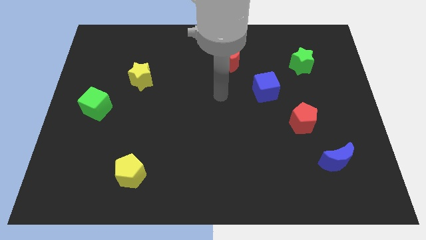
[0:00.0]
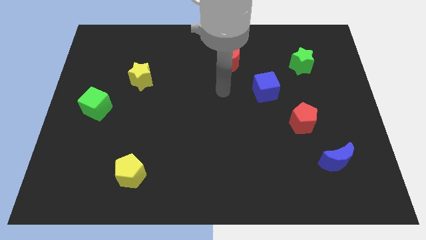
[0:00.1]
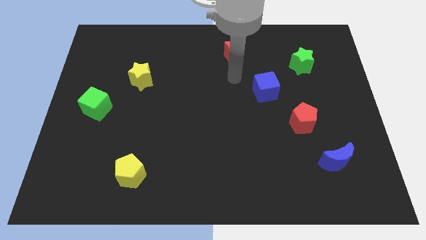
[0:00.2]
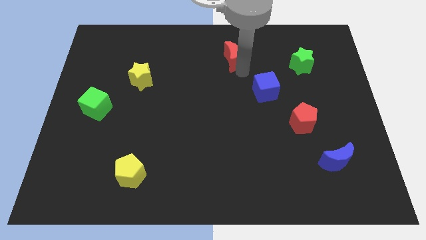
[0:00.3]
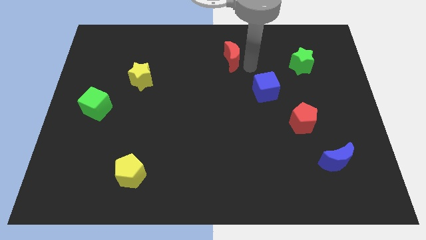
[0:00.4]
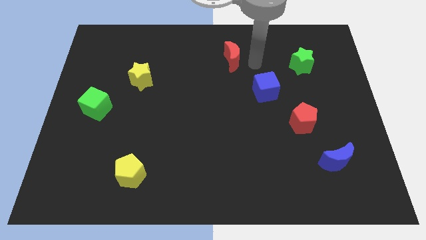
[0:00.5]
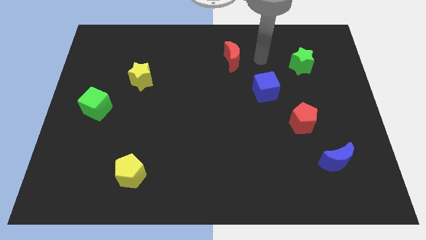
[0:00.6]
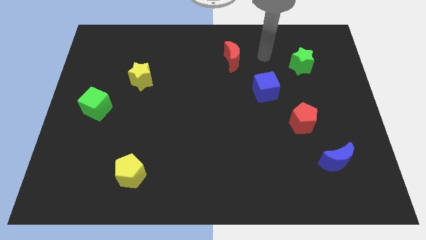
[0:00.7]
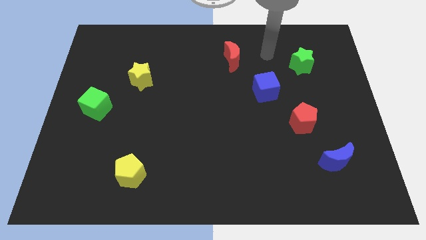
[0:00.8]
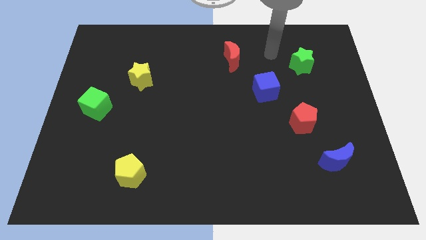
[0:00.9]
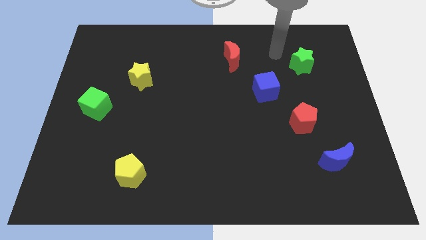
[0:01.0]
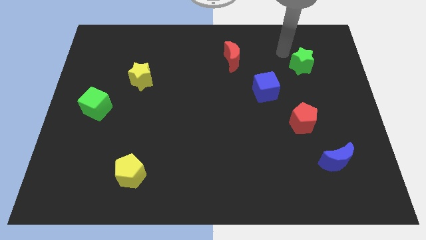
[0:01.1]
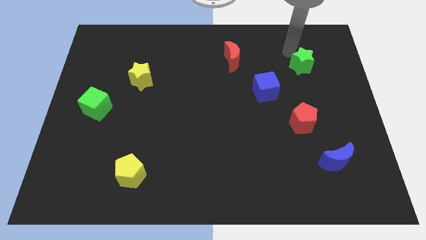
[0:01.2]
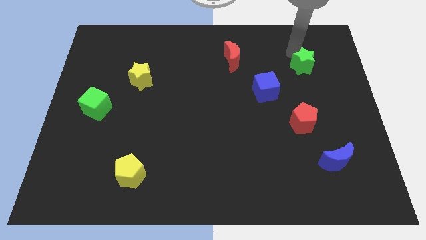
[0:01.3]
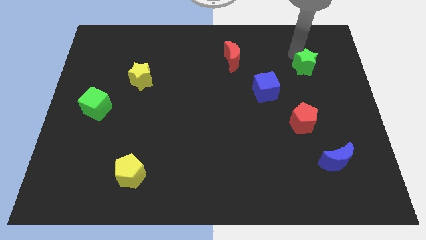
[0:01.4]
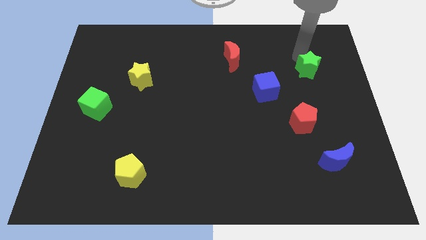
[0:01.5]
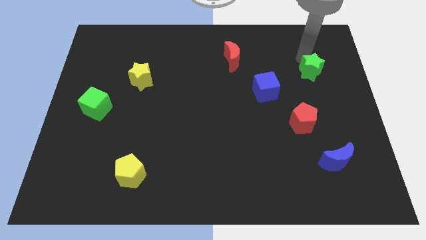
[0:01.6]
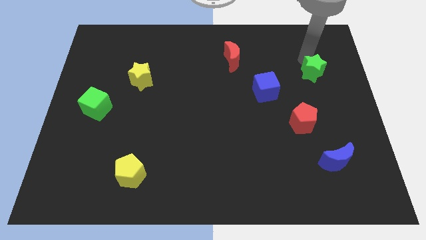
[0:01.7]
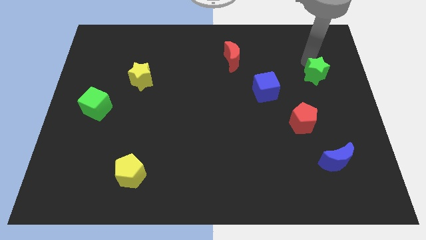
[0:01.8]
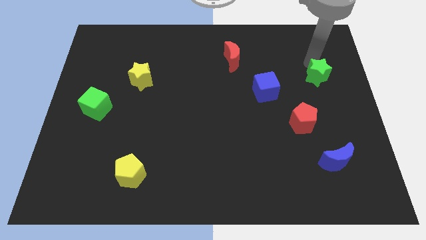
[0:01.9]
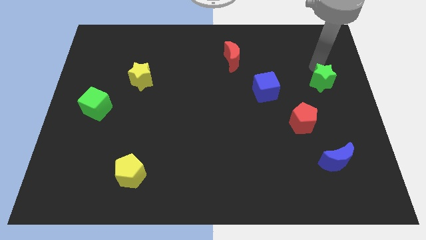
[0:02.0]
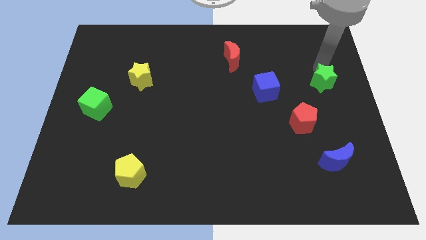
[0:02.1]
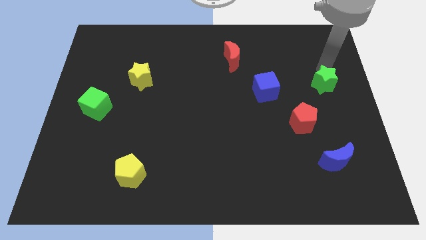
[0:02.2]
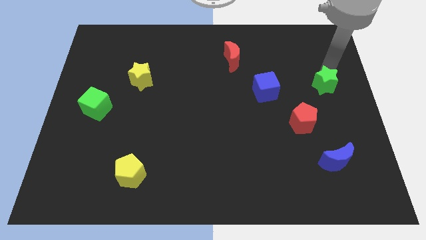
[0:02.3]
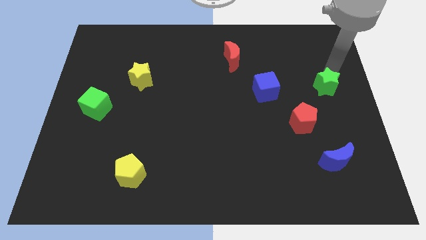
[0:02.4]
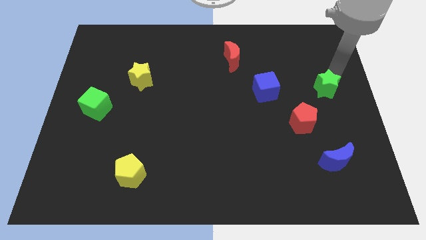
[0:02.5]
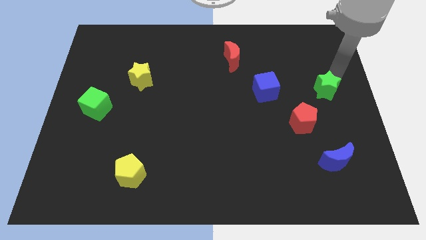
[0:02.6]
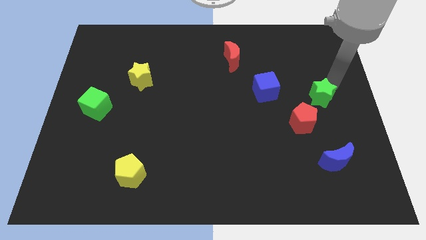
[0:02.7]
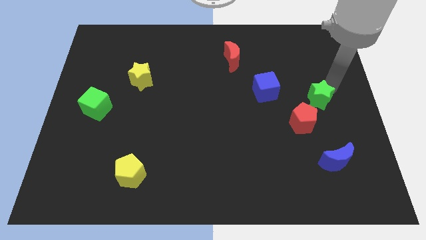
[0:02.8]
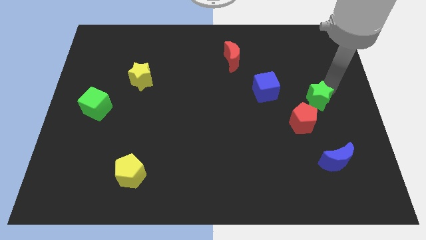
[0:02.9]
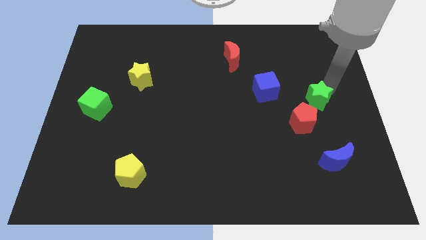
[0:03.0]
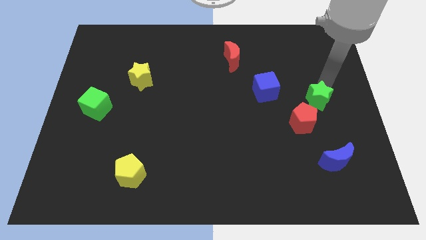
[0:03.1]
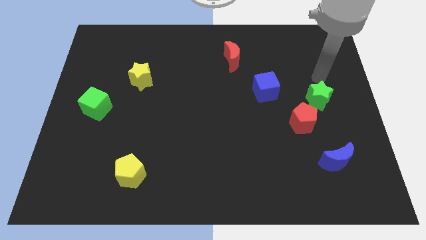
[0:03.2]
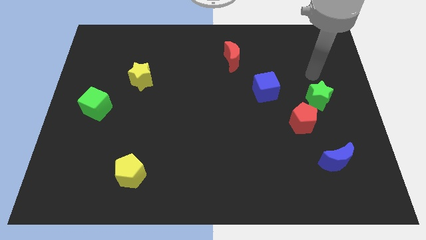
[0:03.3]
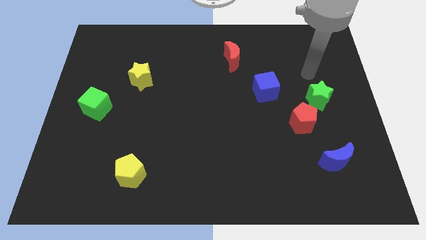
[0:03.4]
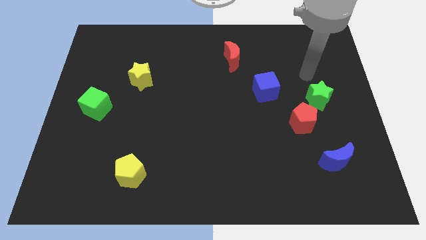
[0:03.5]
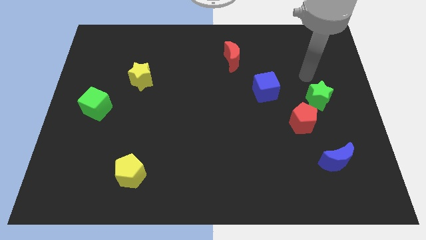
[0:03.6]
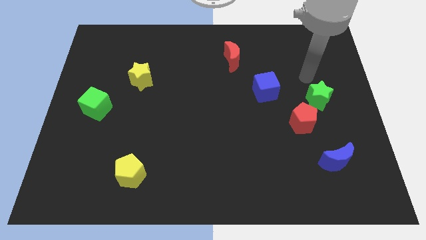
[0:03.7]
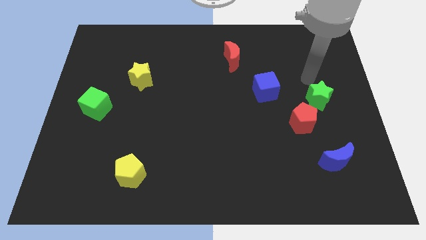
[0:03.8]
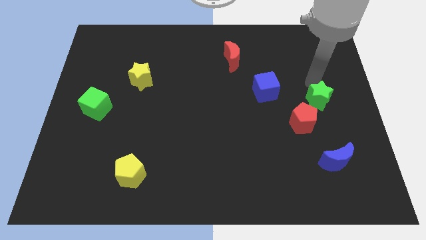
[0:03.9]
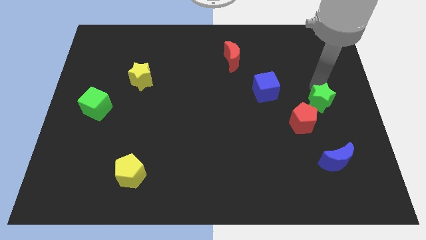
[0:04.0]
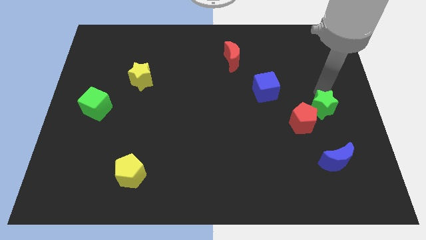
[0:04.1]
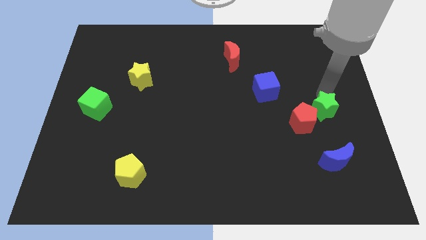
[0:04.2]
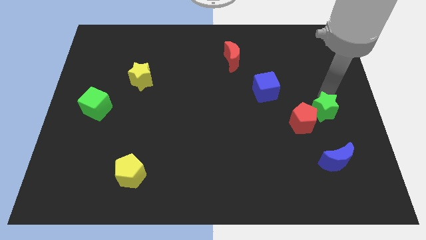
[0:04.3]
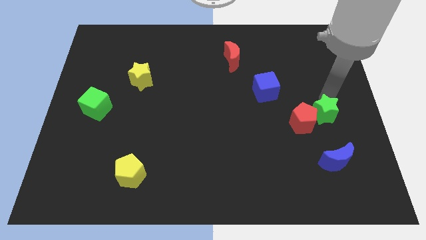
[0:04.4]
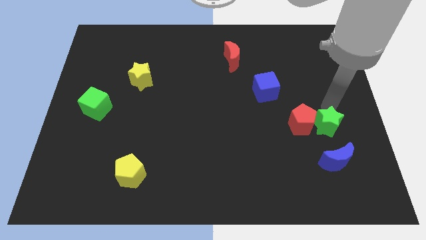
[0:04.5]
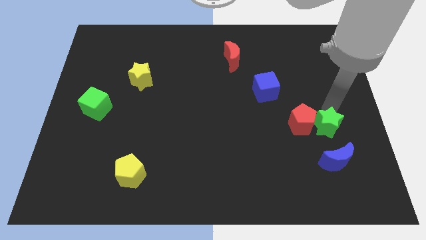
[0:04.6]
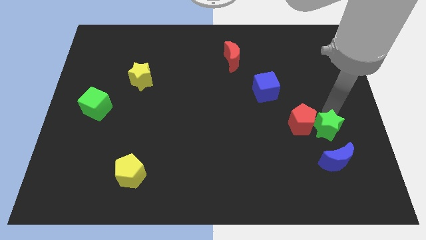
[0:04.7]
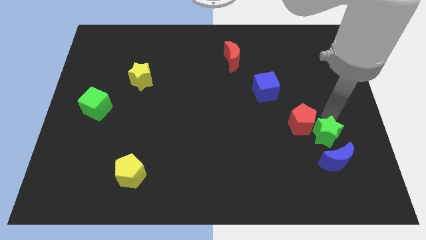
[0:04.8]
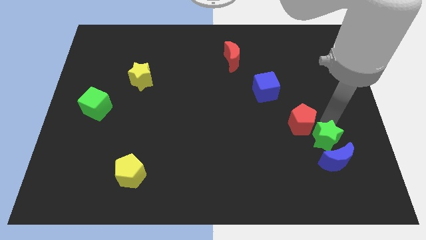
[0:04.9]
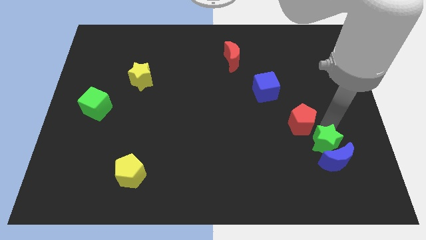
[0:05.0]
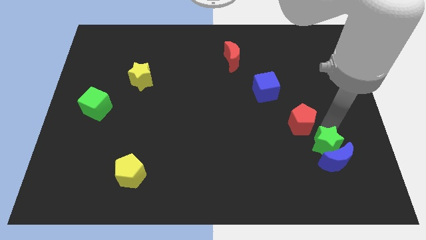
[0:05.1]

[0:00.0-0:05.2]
move the green star close to the blue moon

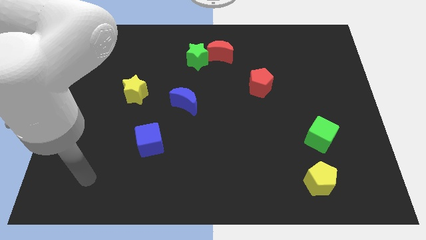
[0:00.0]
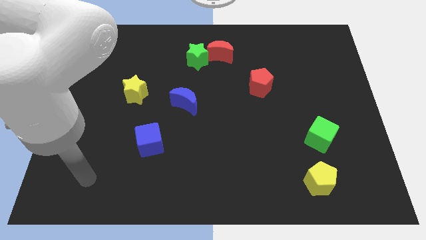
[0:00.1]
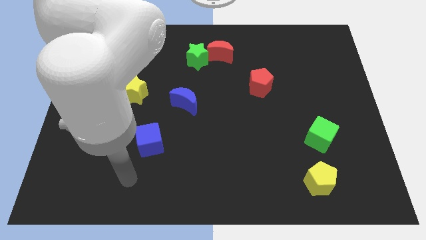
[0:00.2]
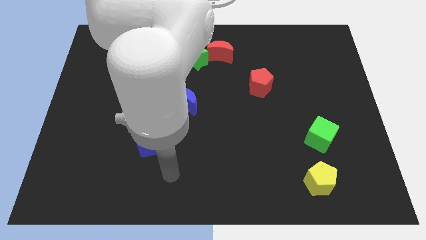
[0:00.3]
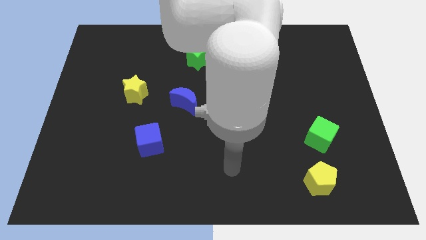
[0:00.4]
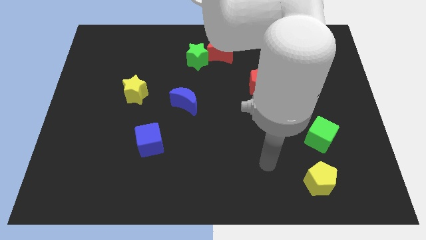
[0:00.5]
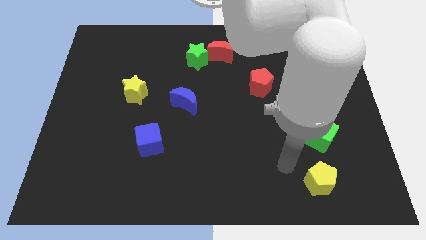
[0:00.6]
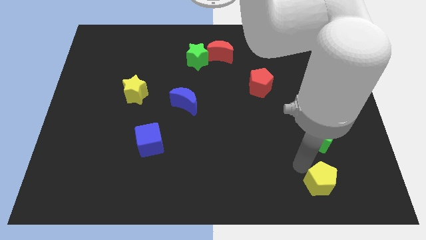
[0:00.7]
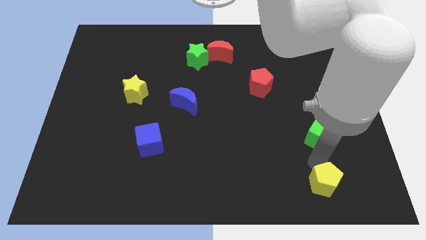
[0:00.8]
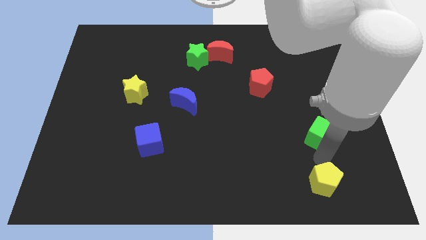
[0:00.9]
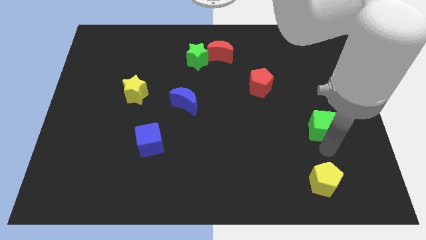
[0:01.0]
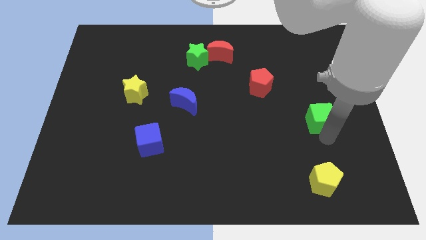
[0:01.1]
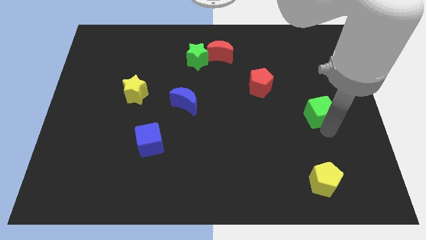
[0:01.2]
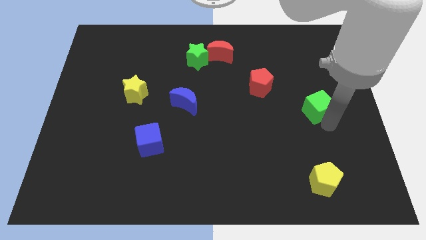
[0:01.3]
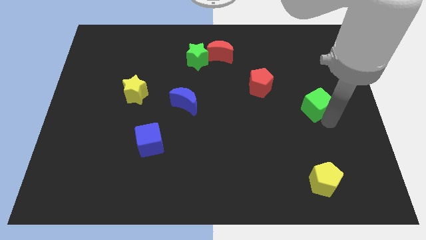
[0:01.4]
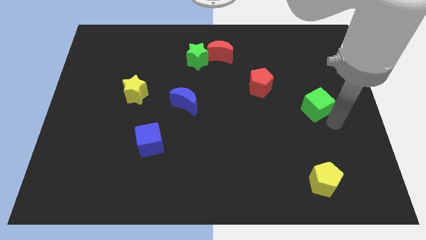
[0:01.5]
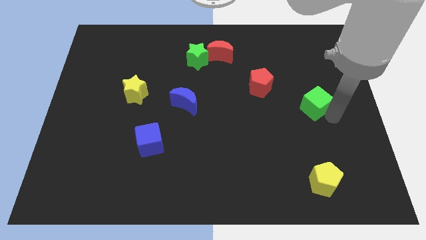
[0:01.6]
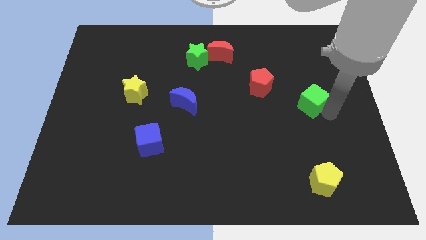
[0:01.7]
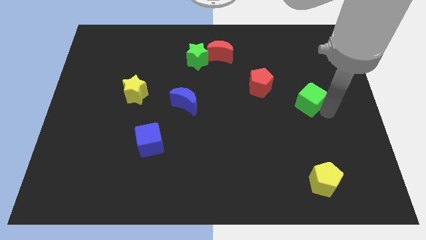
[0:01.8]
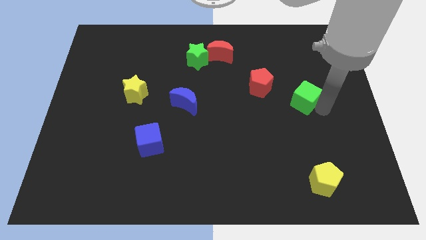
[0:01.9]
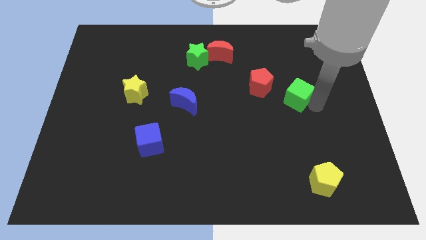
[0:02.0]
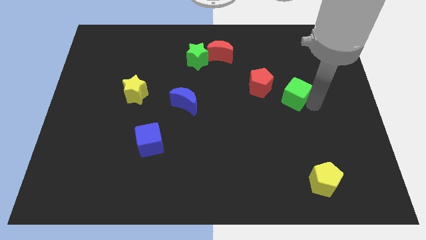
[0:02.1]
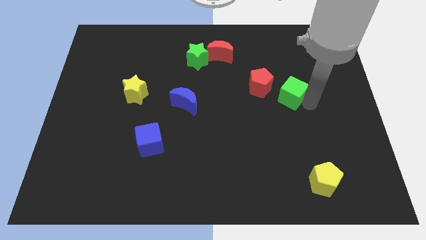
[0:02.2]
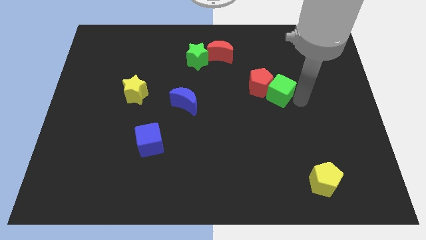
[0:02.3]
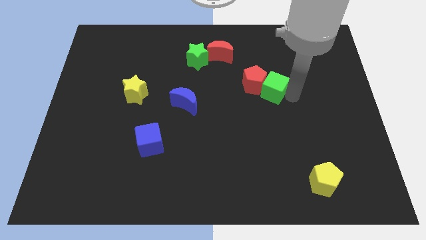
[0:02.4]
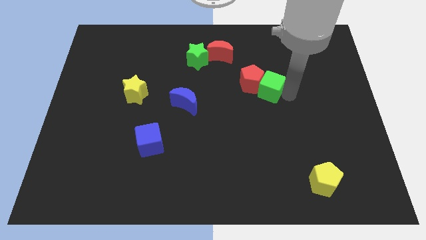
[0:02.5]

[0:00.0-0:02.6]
slide the green cube next to the red pentagon

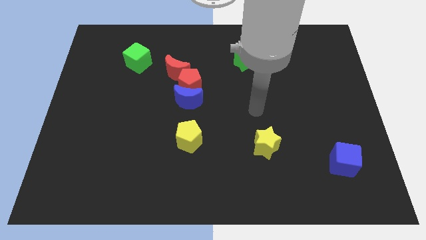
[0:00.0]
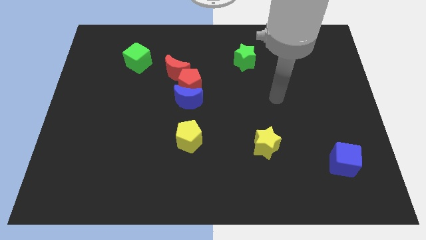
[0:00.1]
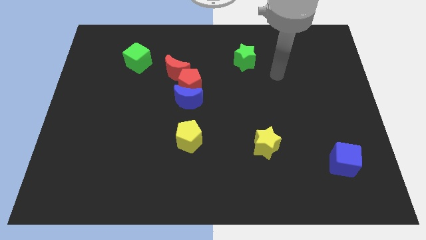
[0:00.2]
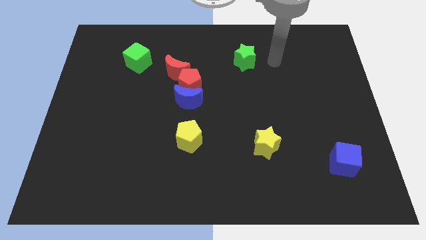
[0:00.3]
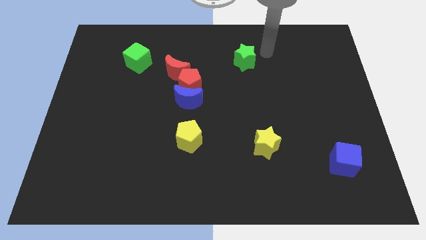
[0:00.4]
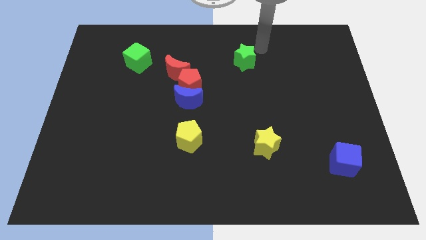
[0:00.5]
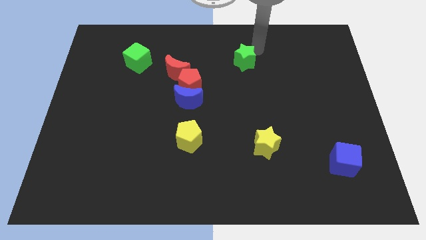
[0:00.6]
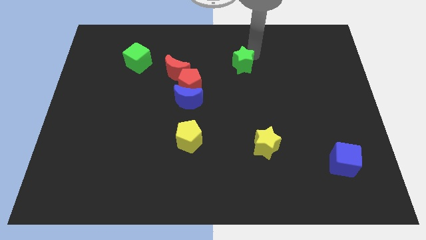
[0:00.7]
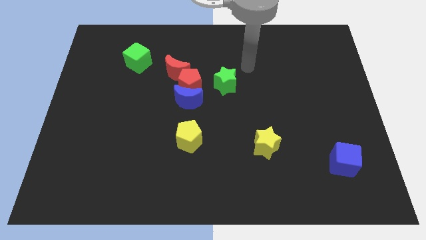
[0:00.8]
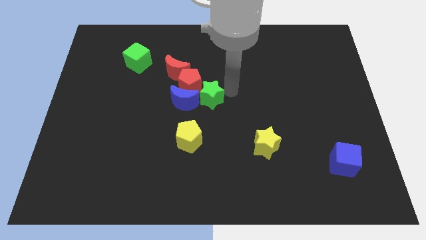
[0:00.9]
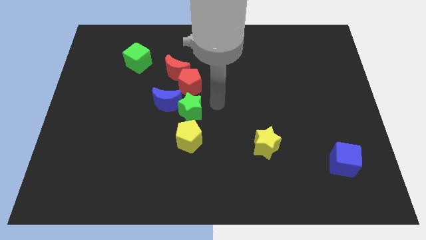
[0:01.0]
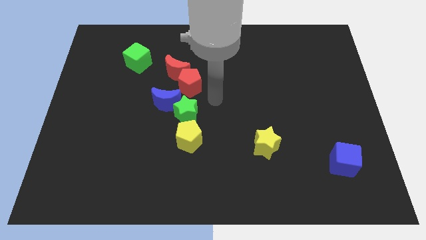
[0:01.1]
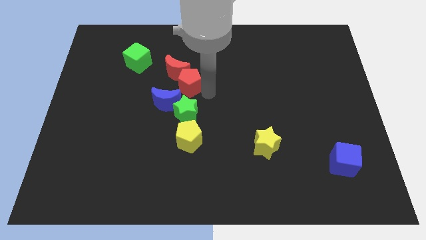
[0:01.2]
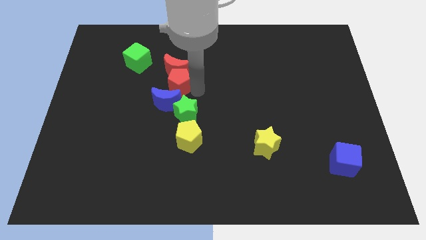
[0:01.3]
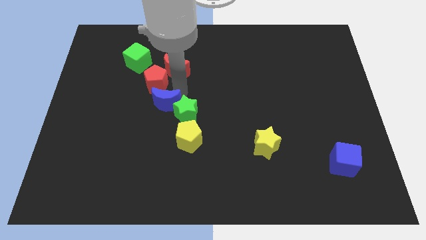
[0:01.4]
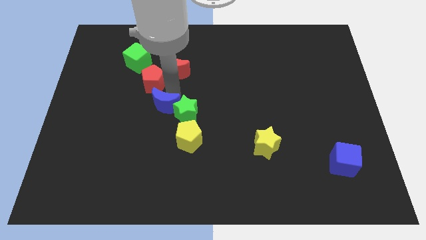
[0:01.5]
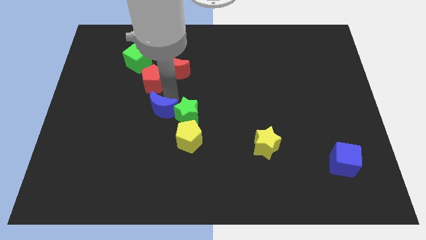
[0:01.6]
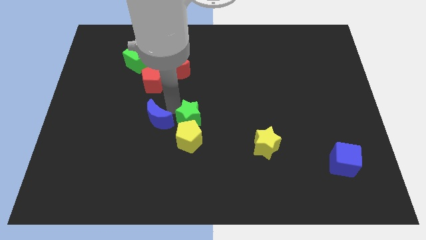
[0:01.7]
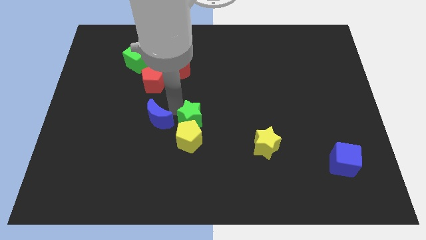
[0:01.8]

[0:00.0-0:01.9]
put the green star to the yellow pentagon
